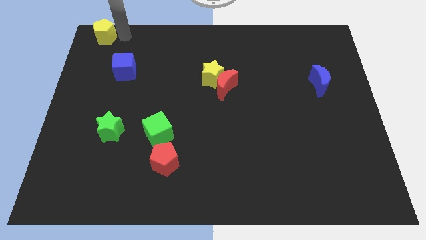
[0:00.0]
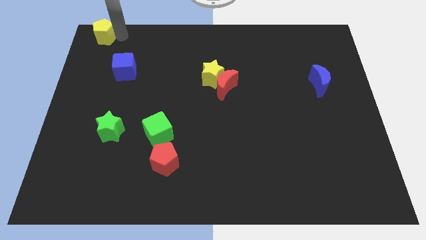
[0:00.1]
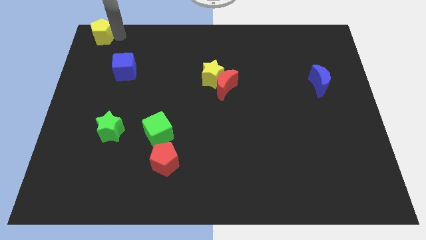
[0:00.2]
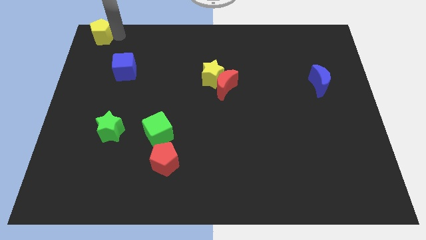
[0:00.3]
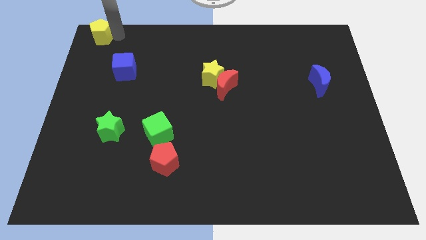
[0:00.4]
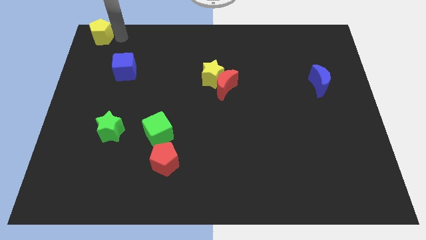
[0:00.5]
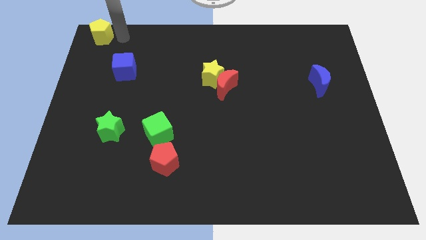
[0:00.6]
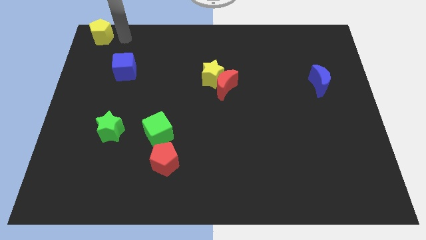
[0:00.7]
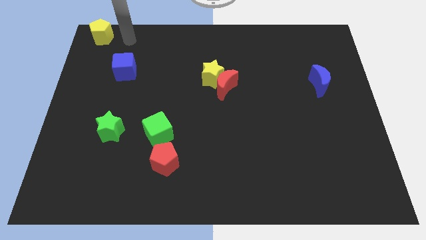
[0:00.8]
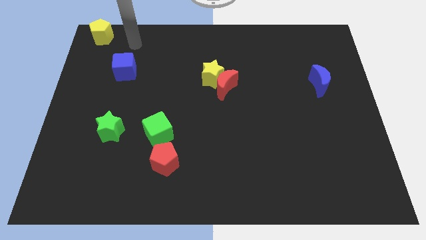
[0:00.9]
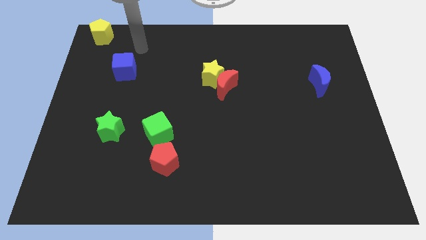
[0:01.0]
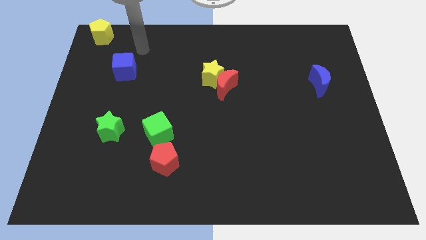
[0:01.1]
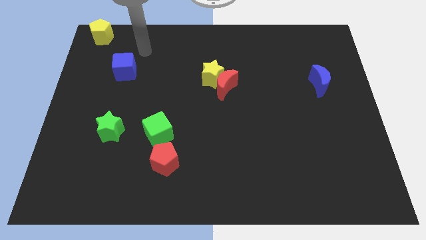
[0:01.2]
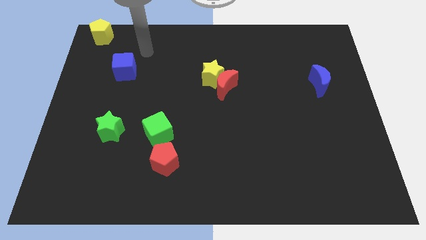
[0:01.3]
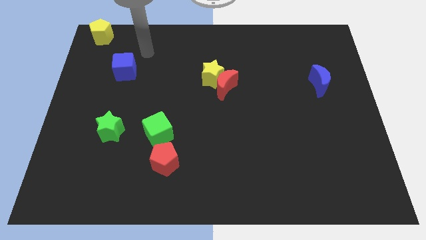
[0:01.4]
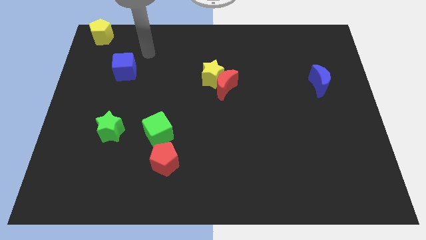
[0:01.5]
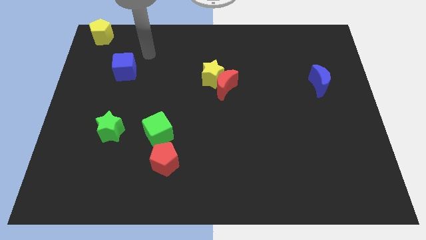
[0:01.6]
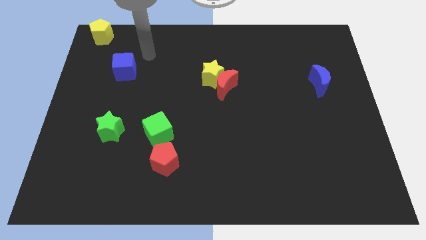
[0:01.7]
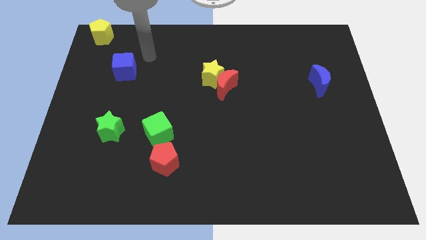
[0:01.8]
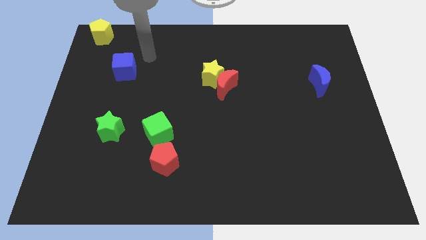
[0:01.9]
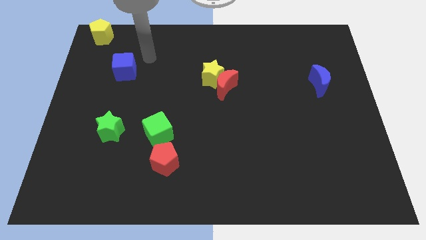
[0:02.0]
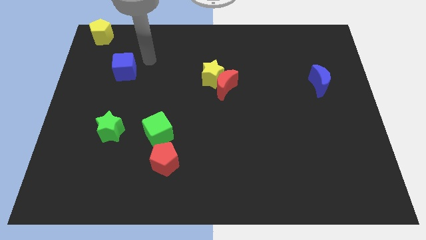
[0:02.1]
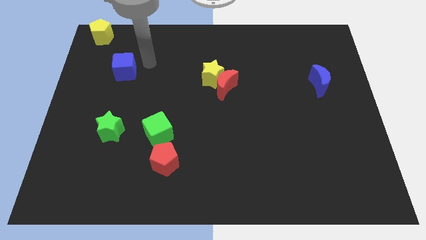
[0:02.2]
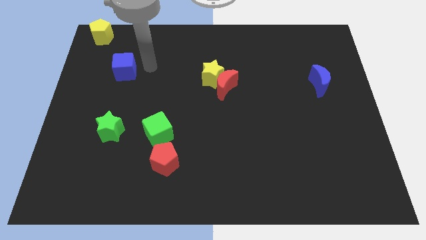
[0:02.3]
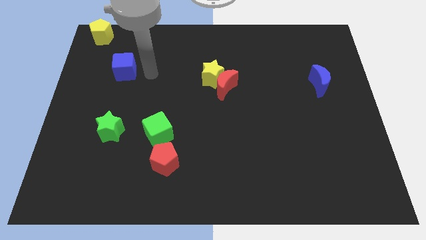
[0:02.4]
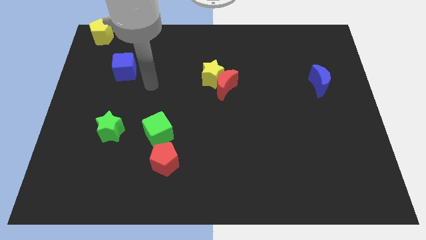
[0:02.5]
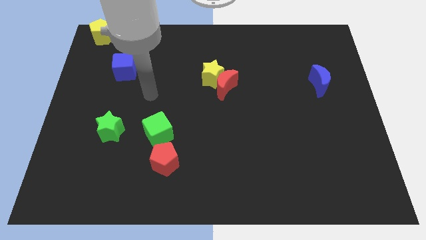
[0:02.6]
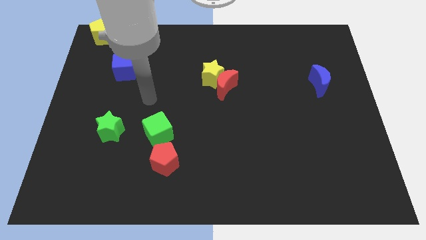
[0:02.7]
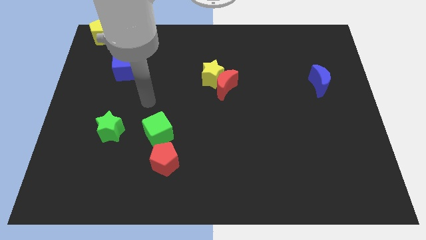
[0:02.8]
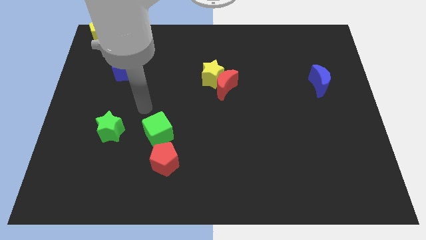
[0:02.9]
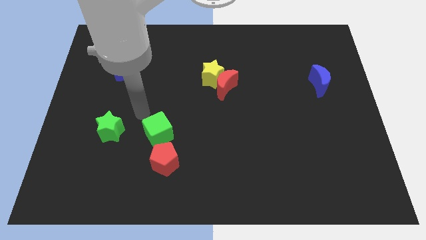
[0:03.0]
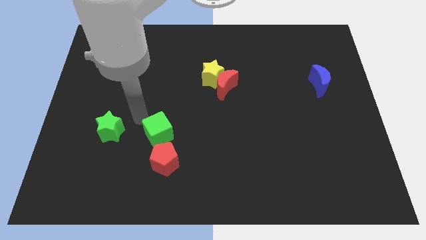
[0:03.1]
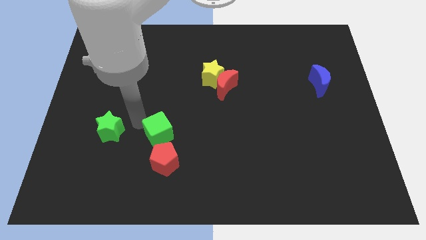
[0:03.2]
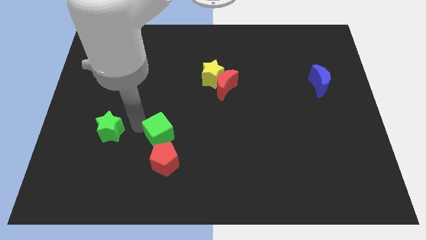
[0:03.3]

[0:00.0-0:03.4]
place your arm to the left side of the green cube

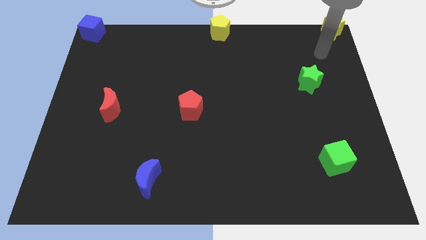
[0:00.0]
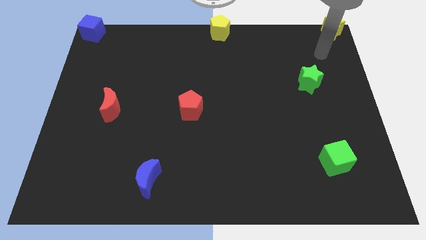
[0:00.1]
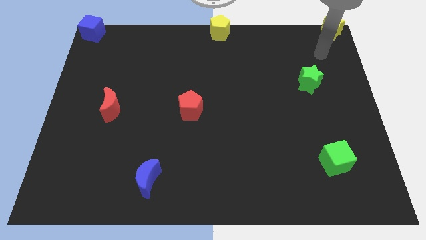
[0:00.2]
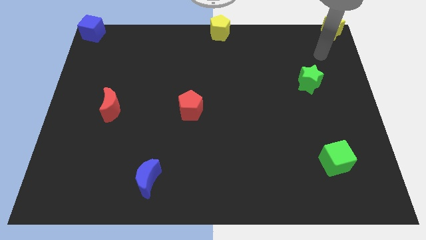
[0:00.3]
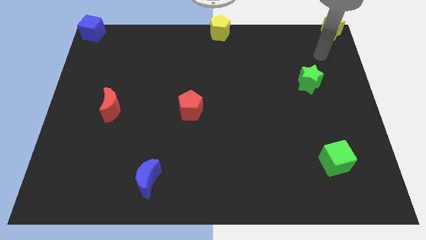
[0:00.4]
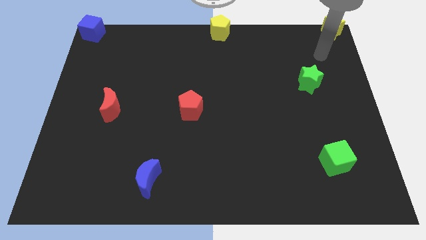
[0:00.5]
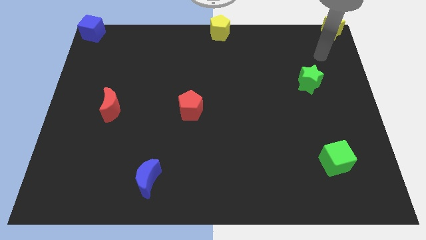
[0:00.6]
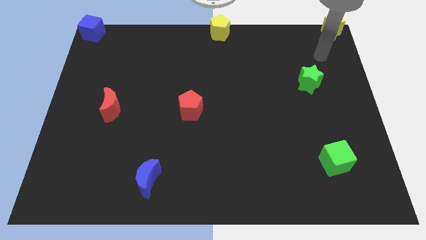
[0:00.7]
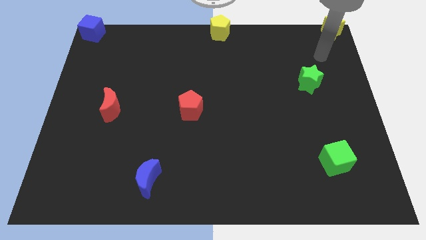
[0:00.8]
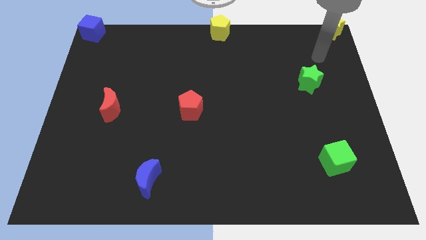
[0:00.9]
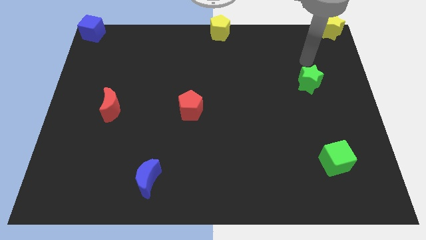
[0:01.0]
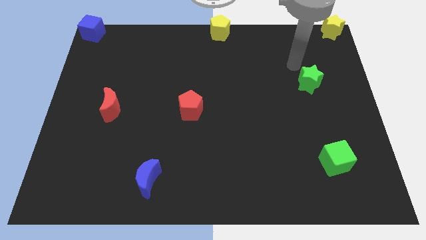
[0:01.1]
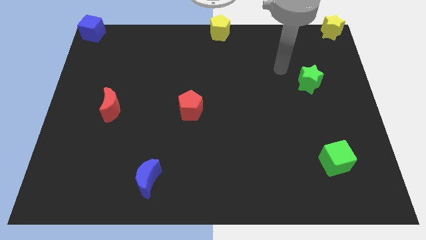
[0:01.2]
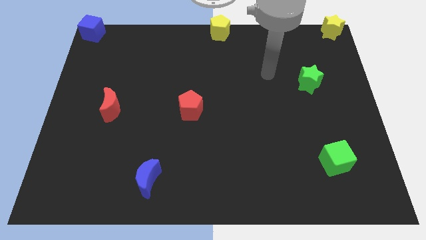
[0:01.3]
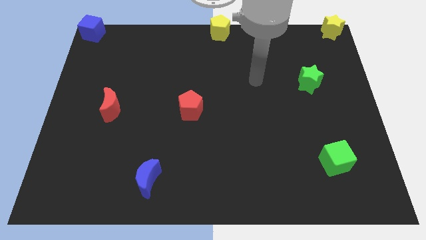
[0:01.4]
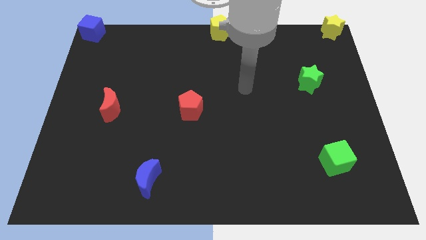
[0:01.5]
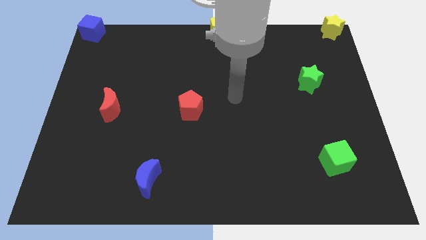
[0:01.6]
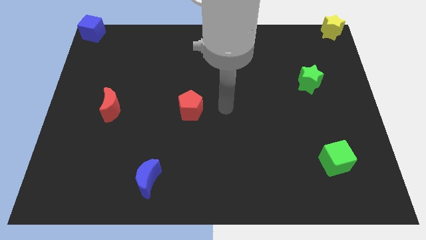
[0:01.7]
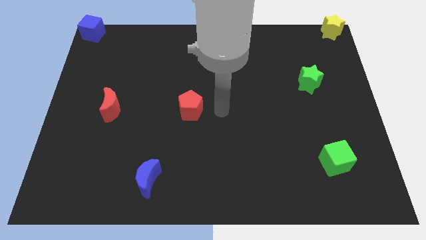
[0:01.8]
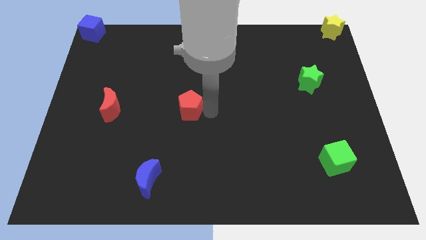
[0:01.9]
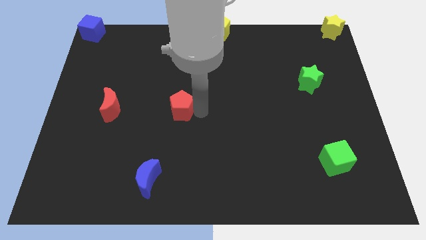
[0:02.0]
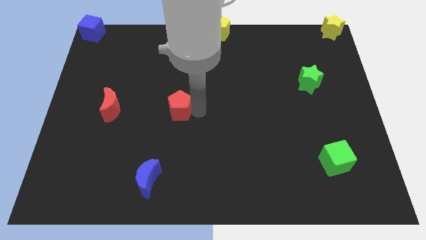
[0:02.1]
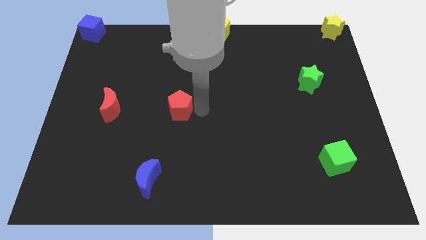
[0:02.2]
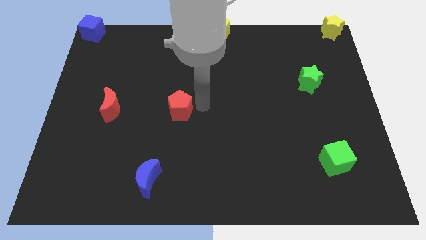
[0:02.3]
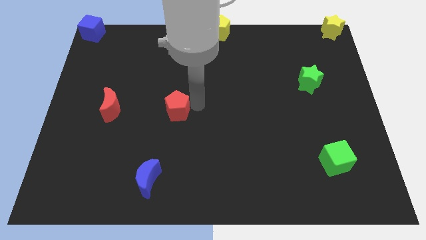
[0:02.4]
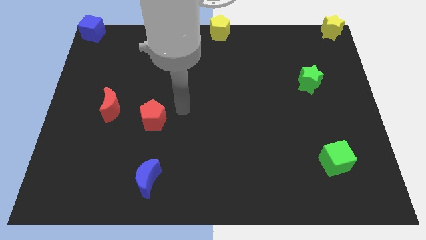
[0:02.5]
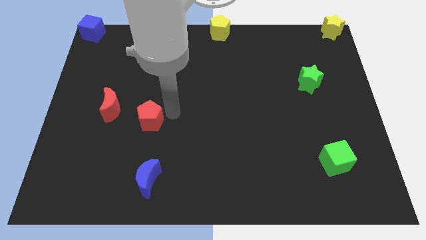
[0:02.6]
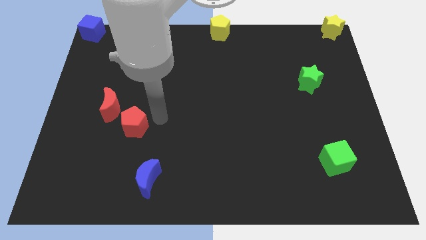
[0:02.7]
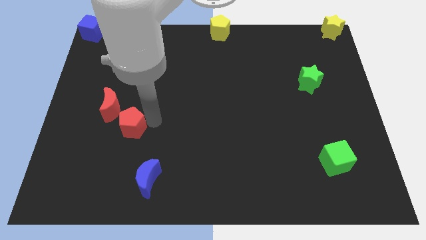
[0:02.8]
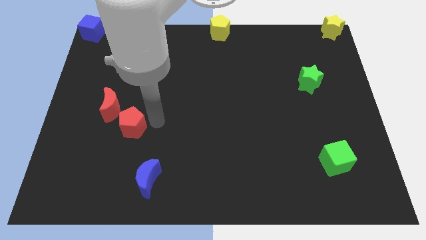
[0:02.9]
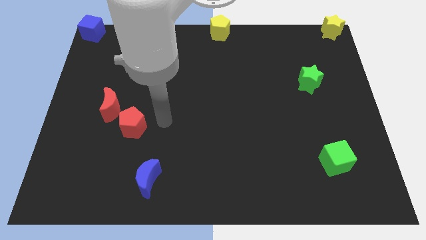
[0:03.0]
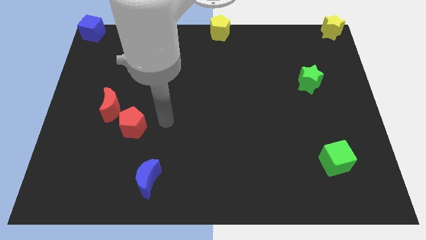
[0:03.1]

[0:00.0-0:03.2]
drag red pentagon towards red moon

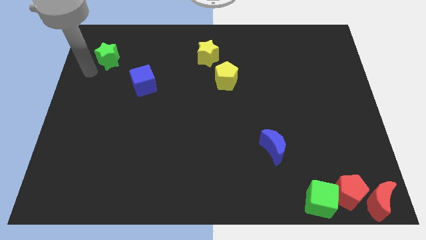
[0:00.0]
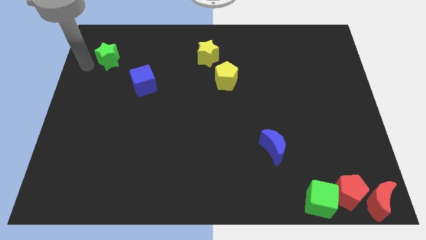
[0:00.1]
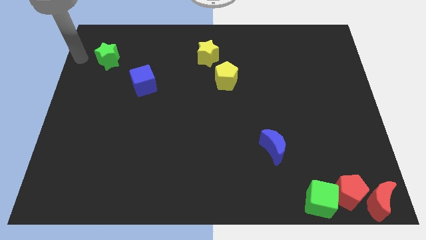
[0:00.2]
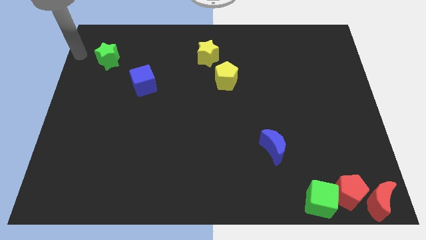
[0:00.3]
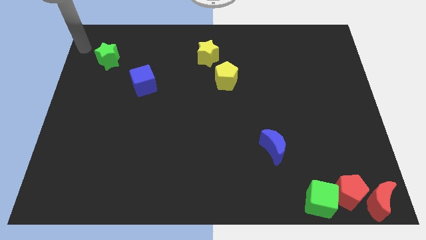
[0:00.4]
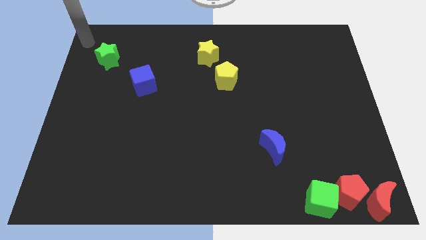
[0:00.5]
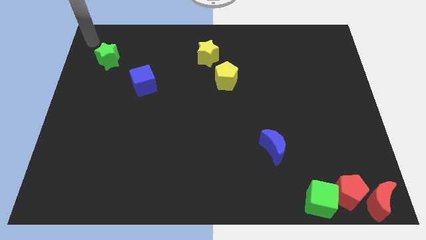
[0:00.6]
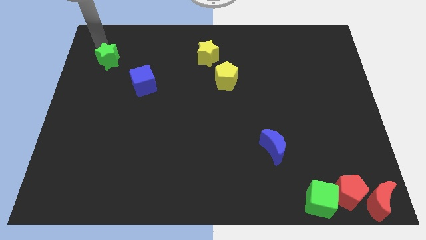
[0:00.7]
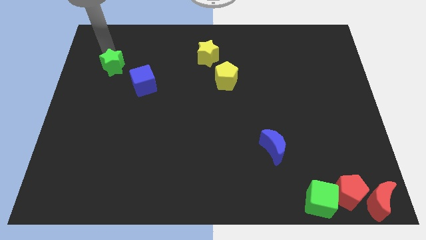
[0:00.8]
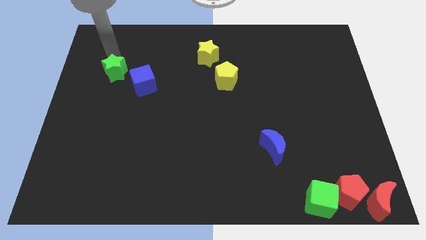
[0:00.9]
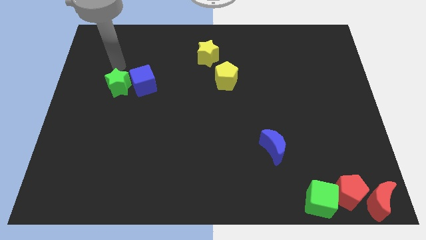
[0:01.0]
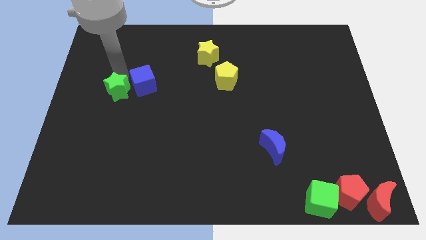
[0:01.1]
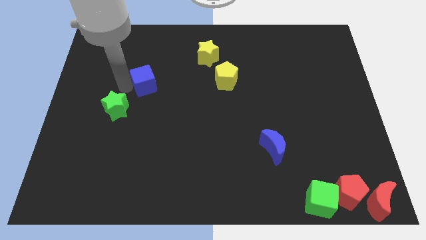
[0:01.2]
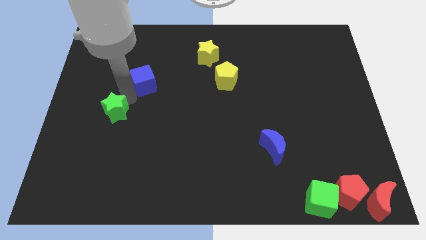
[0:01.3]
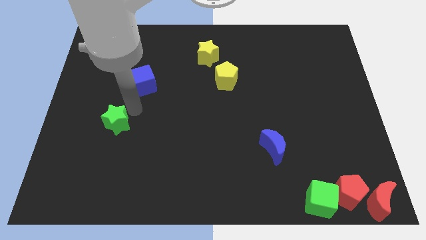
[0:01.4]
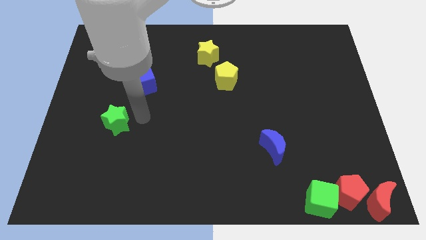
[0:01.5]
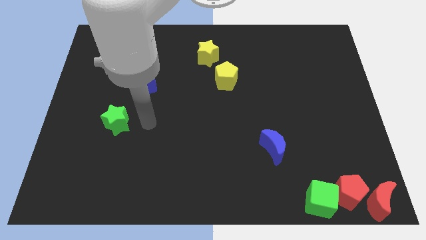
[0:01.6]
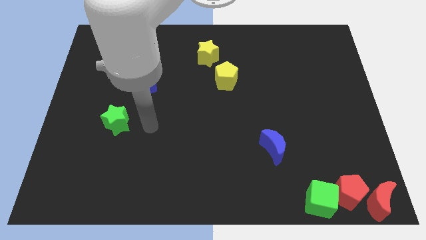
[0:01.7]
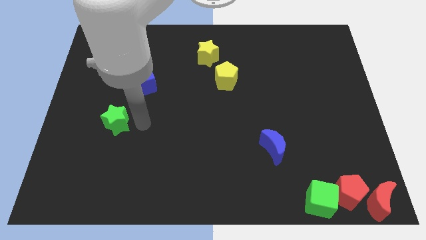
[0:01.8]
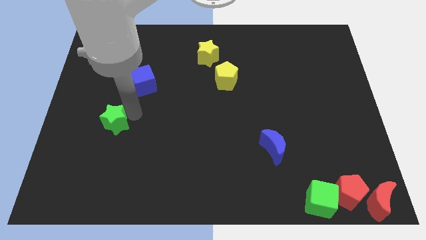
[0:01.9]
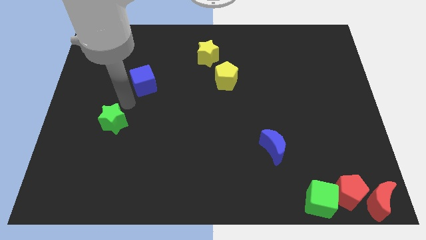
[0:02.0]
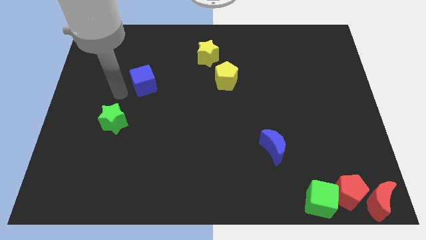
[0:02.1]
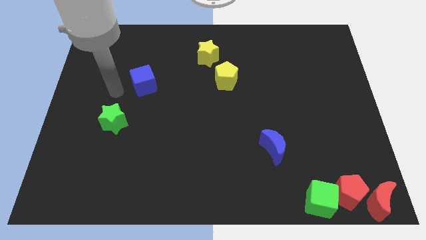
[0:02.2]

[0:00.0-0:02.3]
slide the green star parallel to the left center of the board
